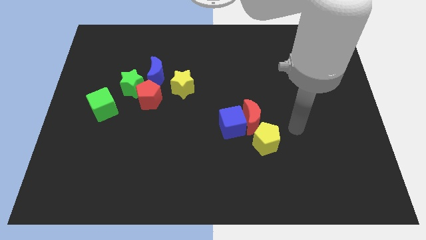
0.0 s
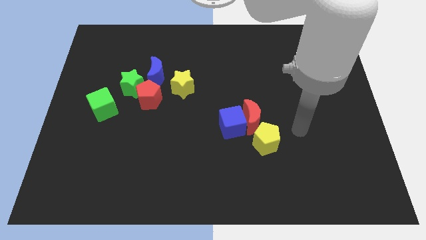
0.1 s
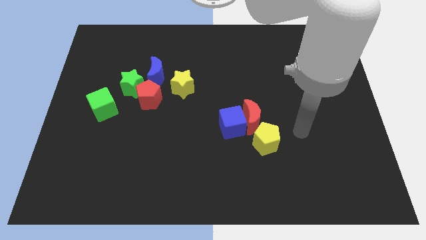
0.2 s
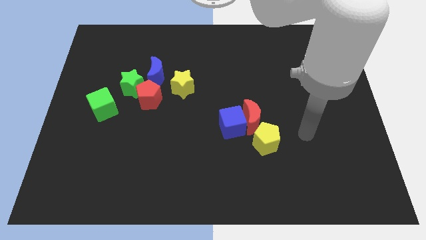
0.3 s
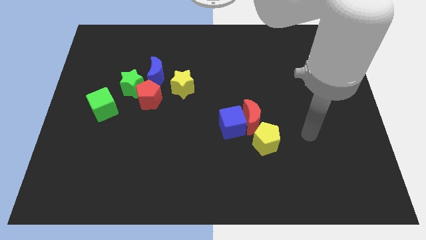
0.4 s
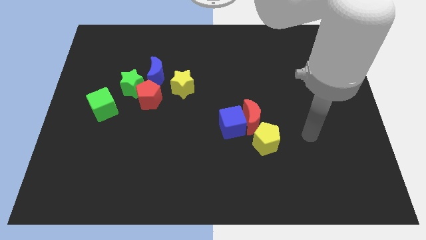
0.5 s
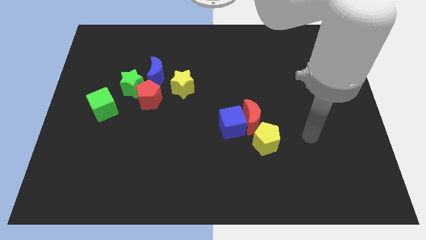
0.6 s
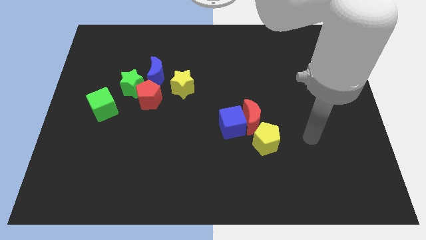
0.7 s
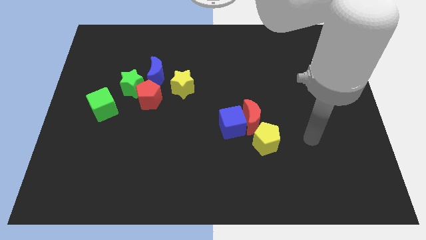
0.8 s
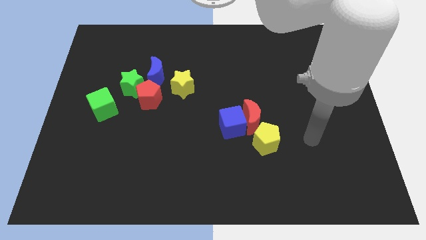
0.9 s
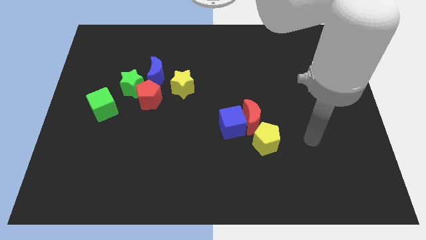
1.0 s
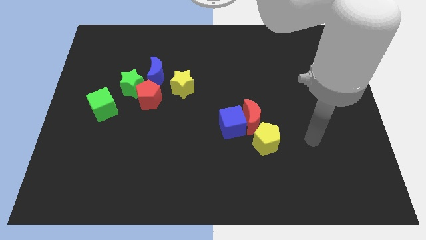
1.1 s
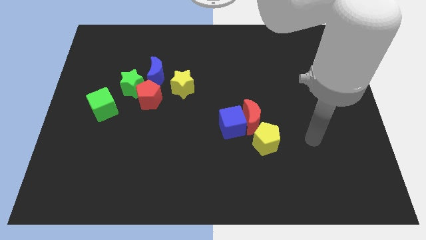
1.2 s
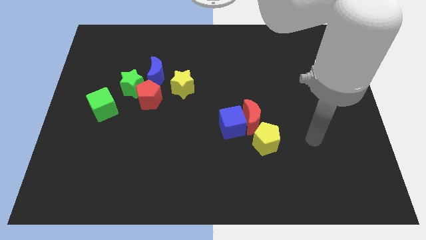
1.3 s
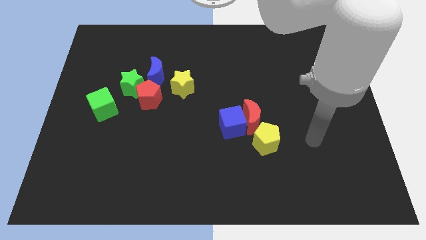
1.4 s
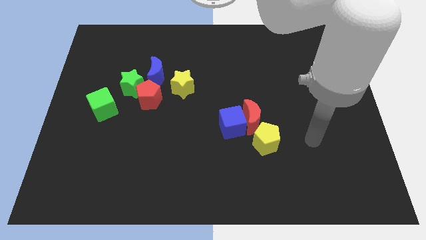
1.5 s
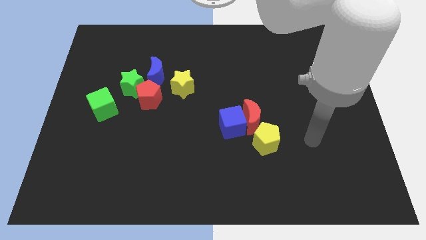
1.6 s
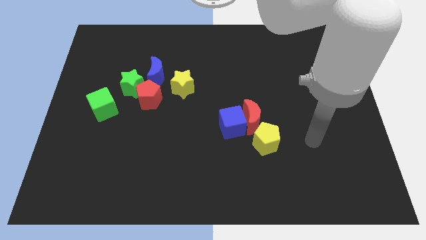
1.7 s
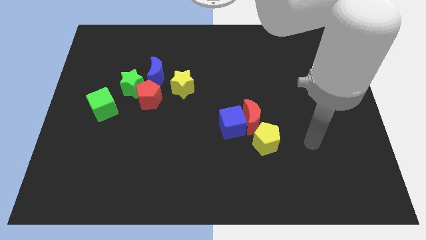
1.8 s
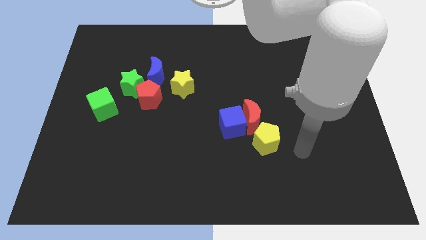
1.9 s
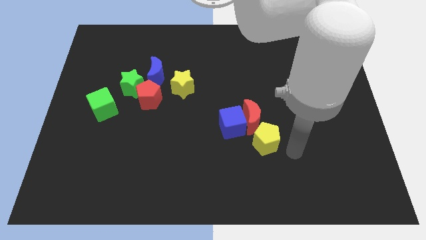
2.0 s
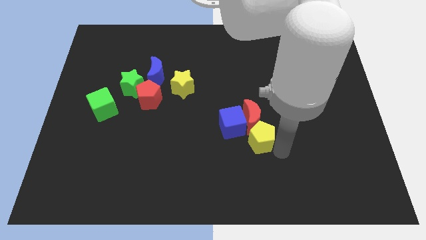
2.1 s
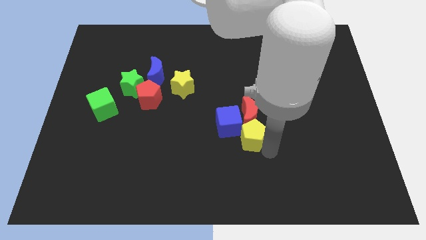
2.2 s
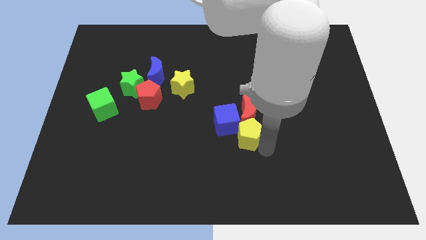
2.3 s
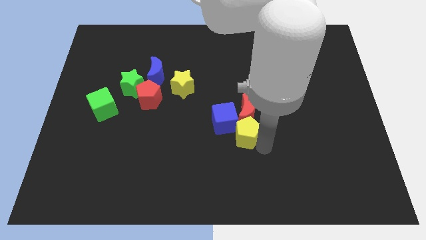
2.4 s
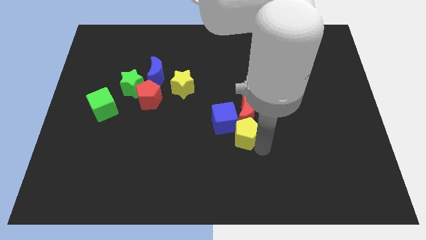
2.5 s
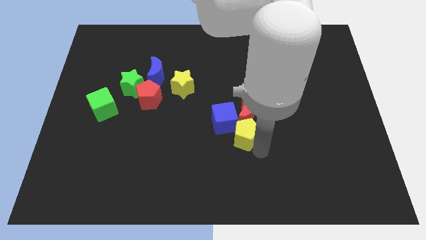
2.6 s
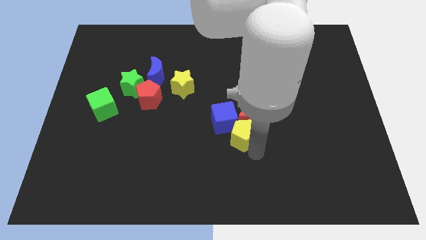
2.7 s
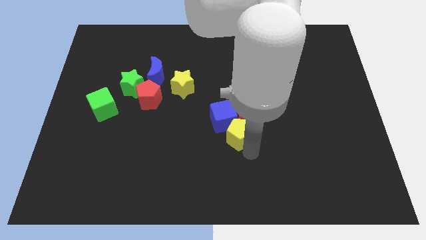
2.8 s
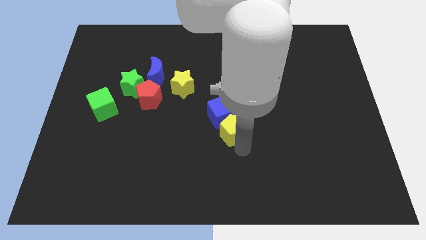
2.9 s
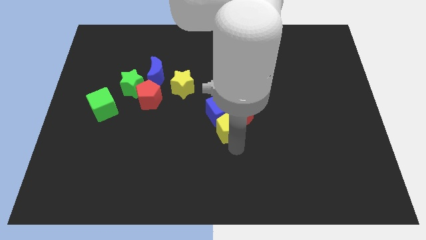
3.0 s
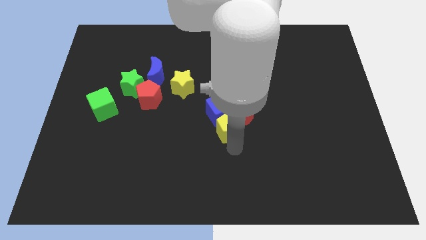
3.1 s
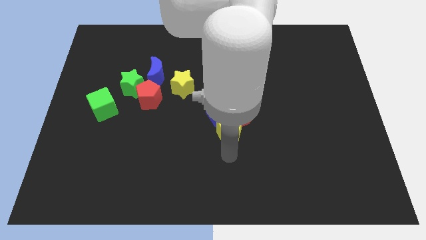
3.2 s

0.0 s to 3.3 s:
push the group of blocks to the center of the board

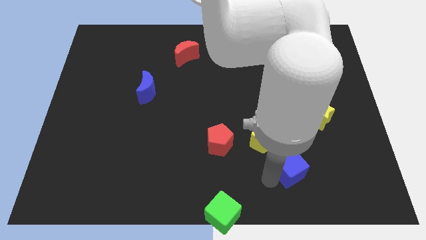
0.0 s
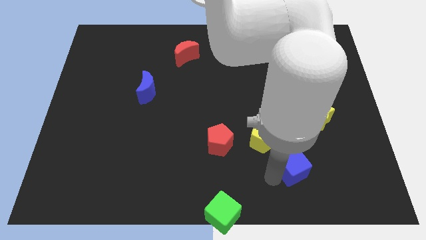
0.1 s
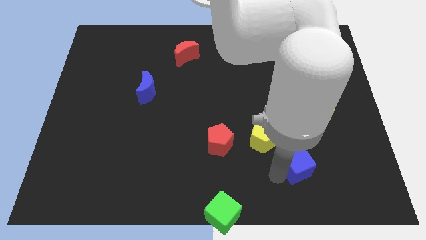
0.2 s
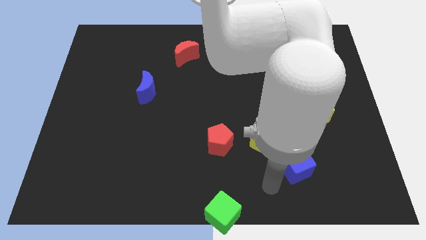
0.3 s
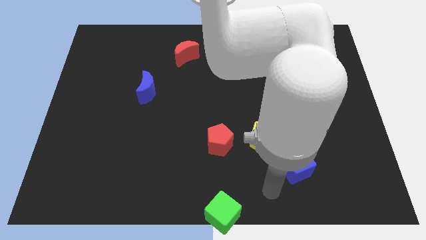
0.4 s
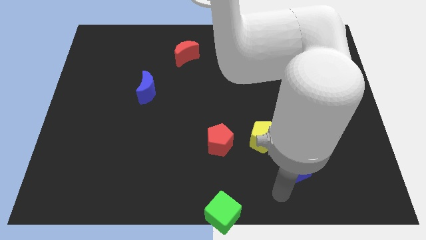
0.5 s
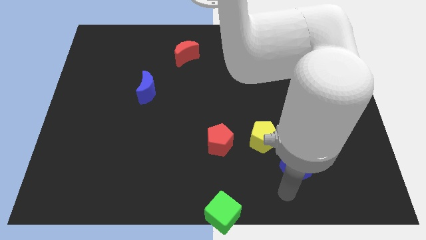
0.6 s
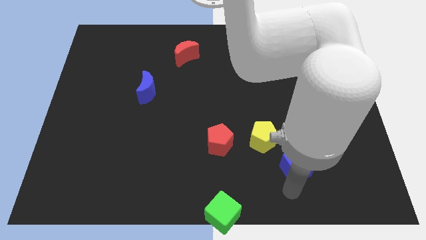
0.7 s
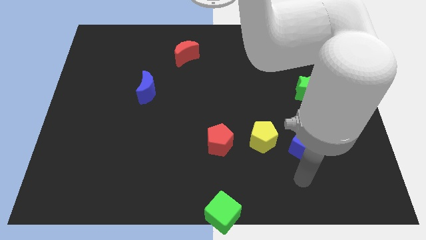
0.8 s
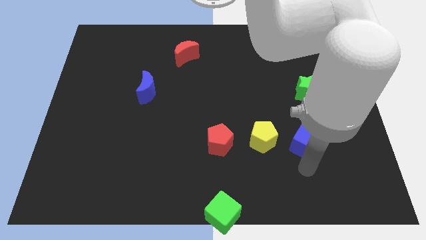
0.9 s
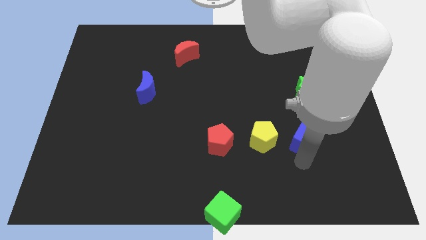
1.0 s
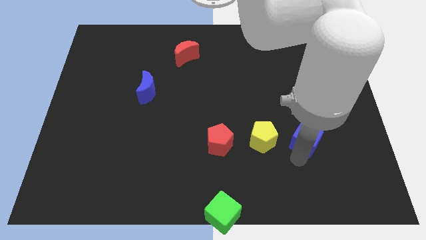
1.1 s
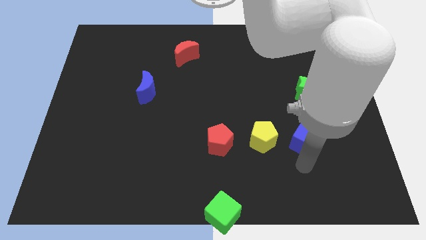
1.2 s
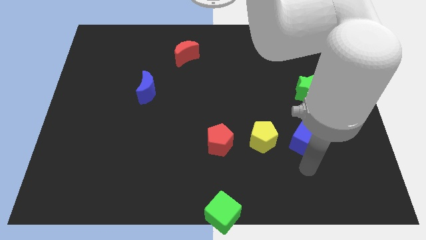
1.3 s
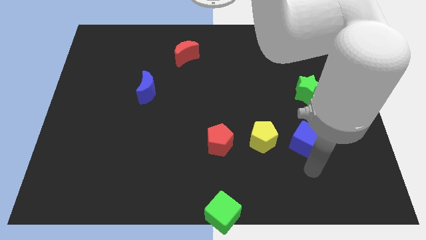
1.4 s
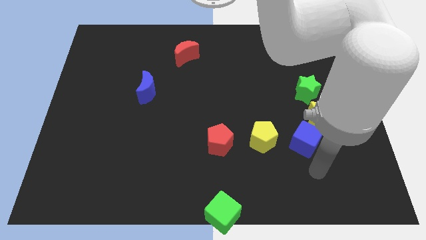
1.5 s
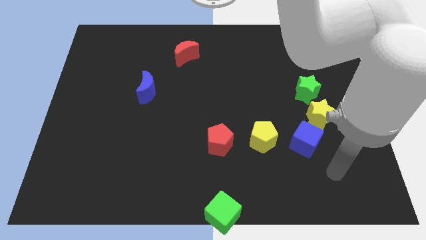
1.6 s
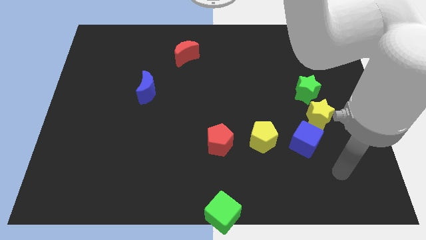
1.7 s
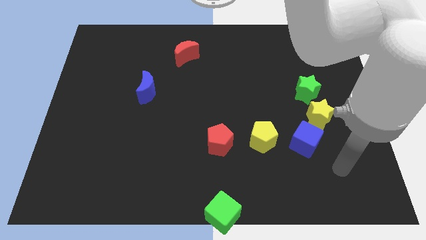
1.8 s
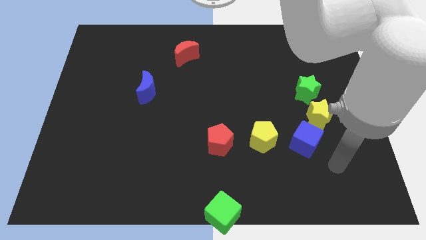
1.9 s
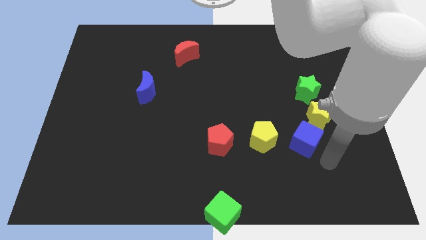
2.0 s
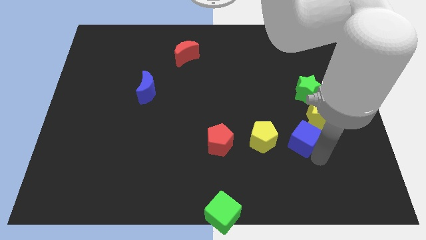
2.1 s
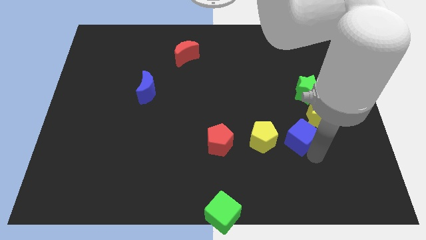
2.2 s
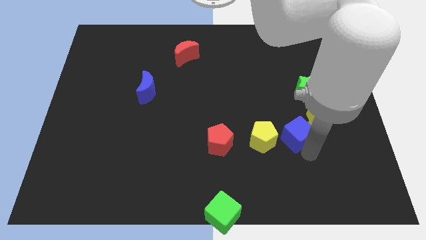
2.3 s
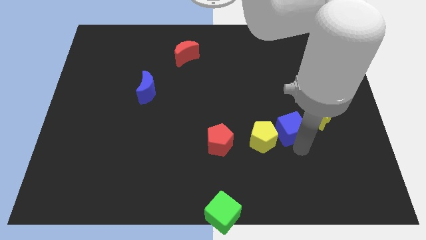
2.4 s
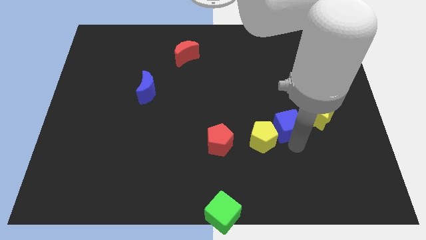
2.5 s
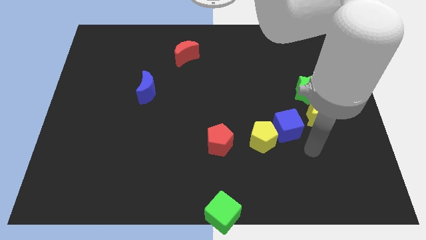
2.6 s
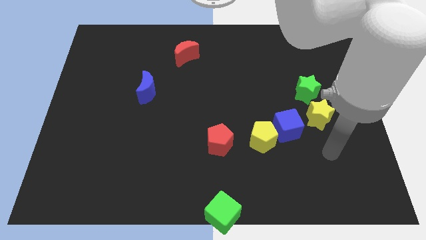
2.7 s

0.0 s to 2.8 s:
place the blue cube in between the yellow blocks

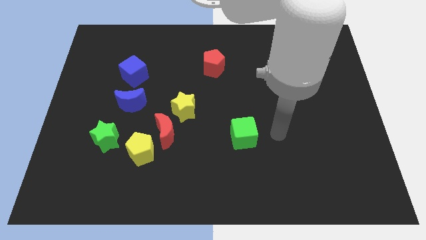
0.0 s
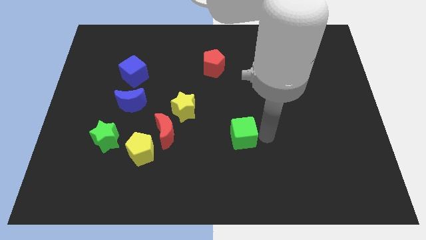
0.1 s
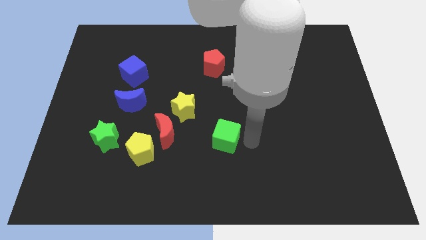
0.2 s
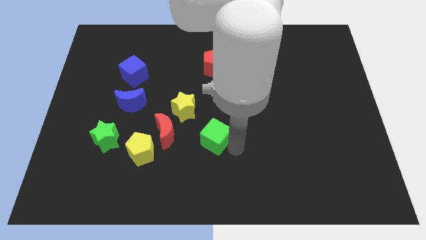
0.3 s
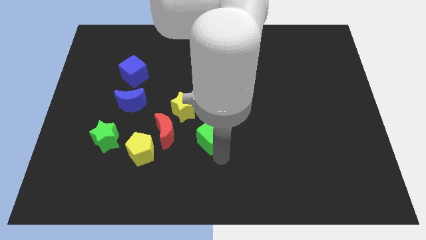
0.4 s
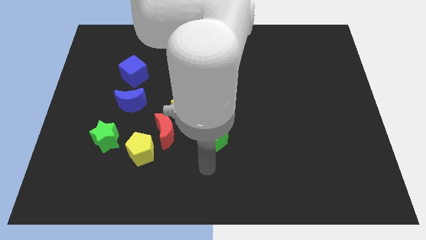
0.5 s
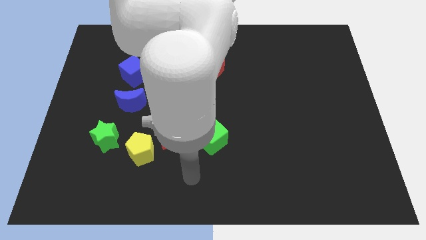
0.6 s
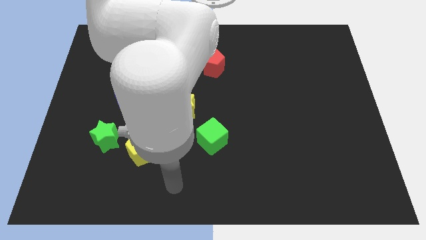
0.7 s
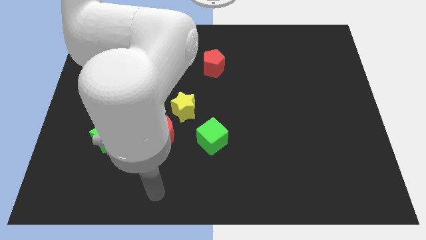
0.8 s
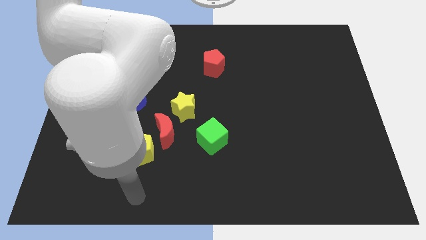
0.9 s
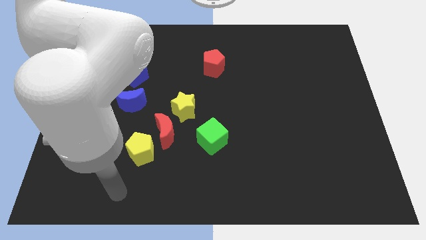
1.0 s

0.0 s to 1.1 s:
slightly push the green cube to the left of the board

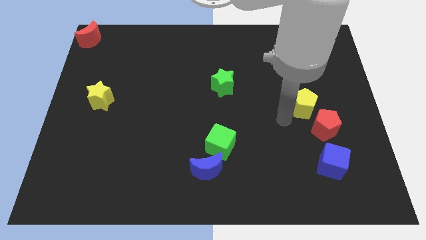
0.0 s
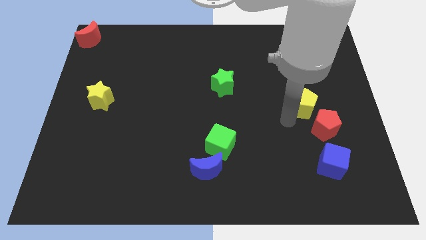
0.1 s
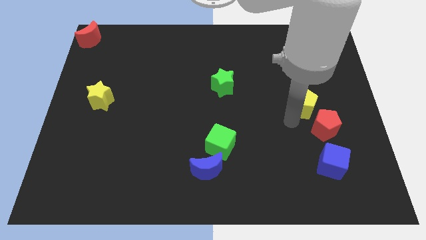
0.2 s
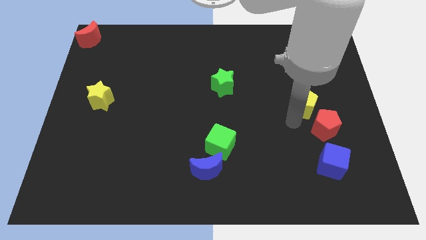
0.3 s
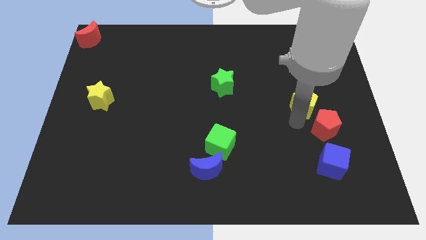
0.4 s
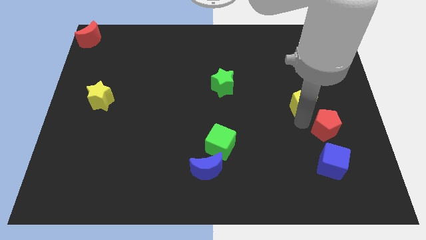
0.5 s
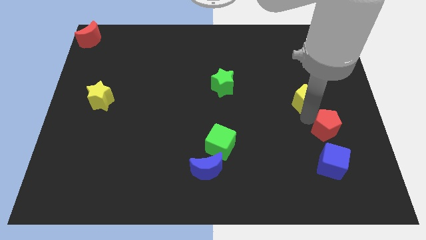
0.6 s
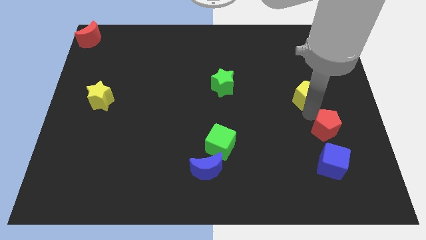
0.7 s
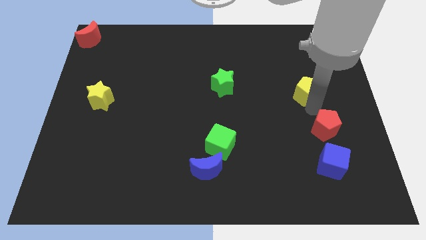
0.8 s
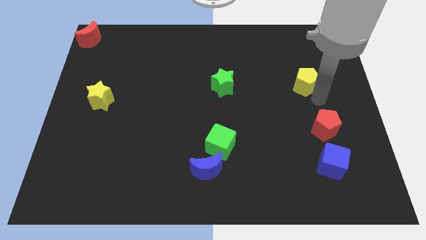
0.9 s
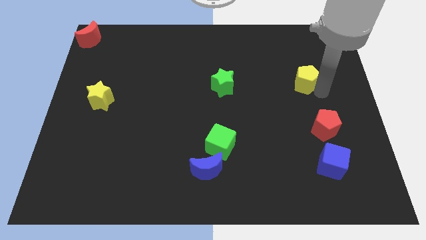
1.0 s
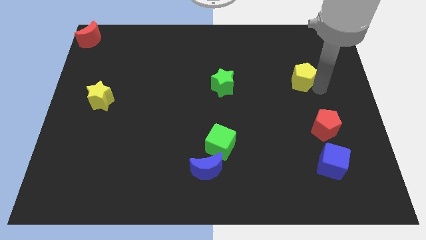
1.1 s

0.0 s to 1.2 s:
place the yellow pentagon to the right of green star

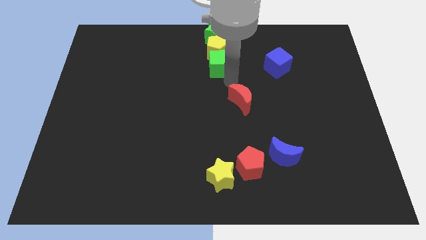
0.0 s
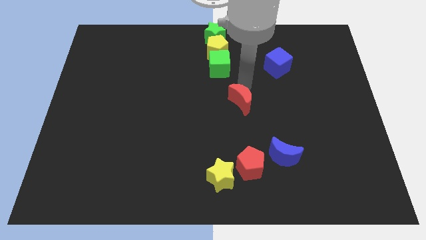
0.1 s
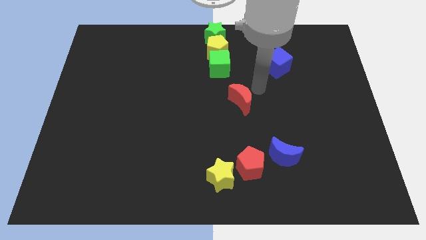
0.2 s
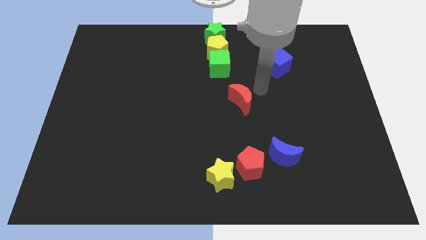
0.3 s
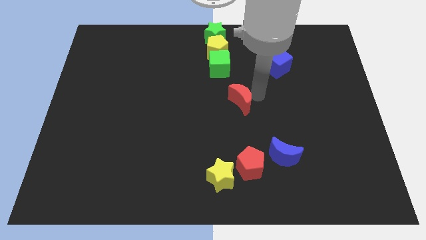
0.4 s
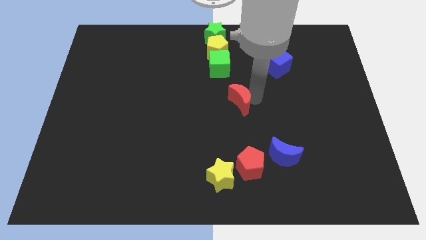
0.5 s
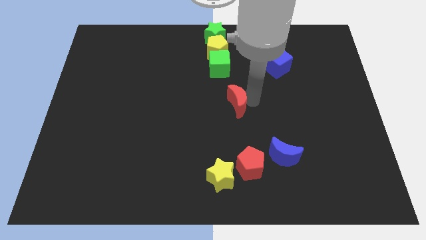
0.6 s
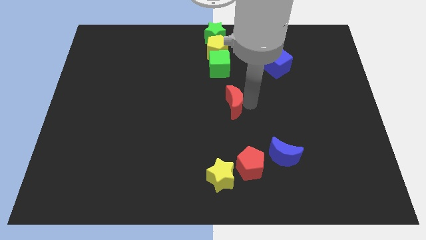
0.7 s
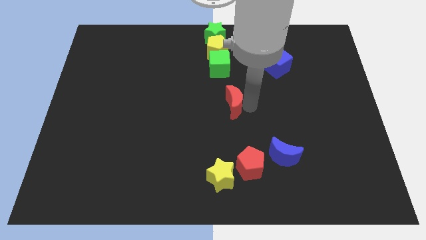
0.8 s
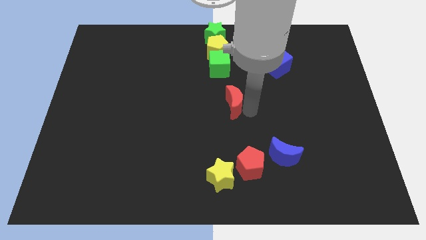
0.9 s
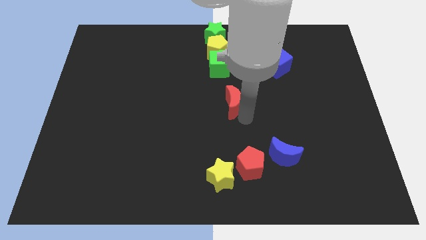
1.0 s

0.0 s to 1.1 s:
push the red crescent slightly to the right
